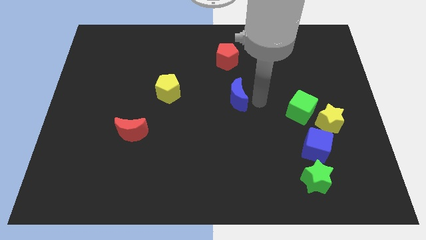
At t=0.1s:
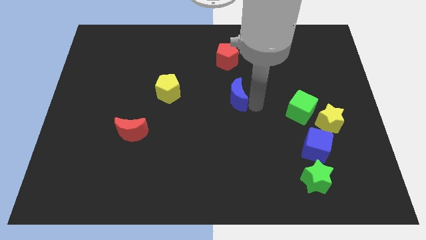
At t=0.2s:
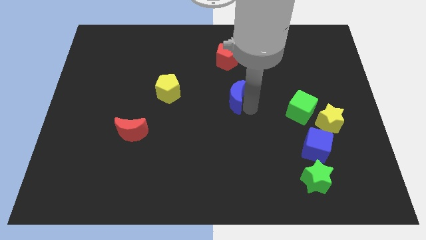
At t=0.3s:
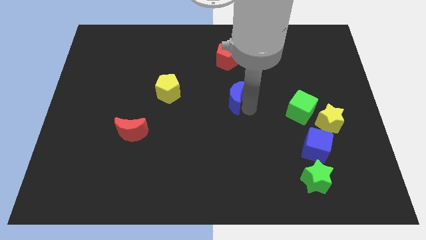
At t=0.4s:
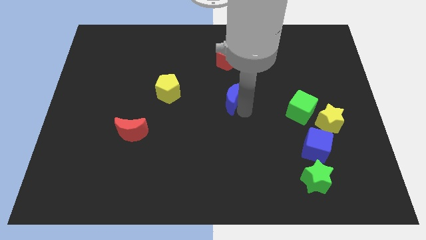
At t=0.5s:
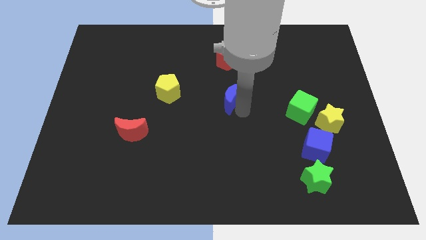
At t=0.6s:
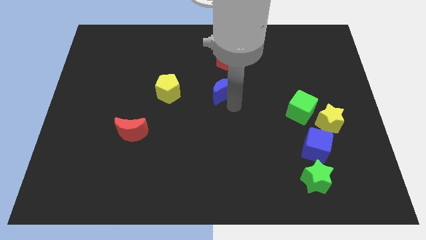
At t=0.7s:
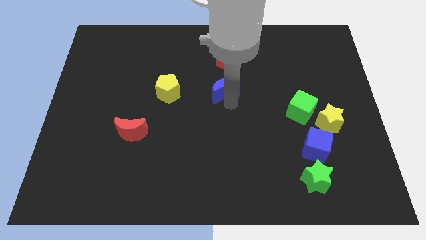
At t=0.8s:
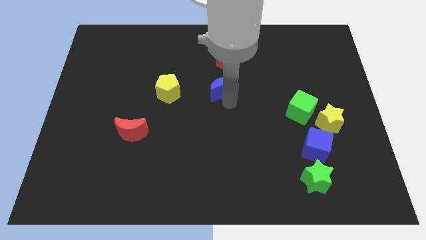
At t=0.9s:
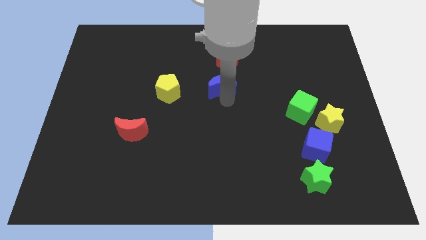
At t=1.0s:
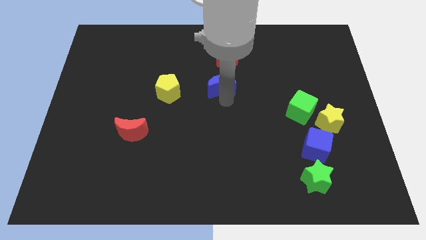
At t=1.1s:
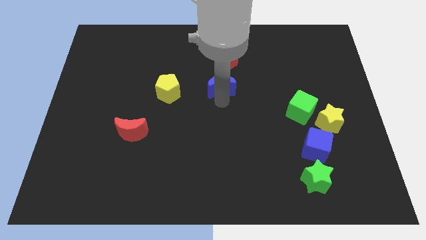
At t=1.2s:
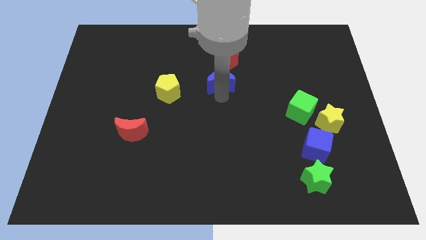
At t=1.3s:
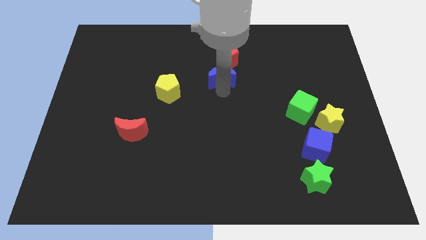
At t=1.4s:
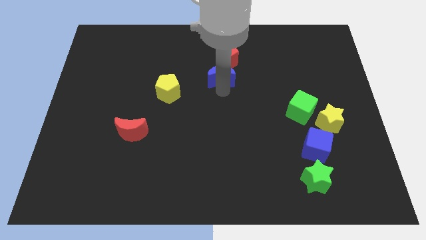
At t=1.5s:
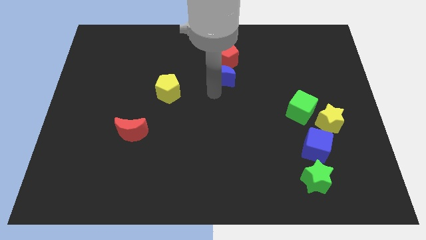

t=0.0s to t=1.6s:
move the blue moon towards the red pentagon

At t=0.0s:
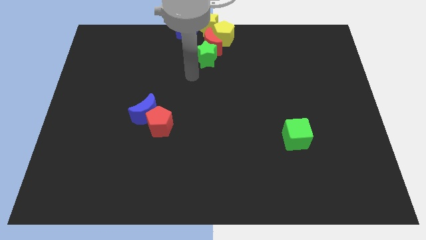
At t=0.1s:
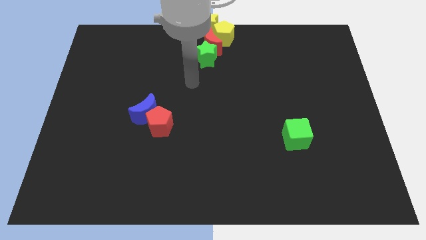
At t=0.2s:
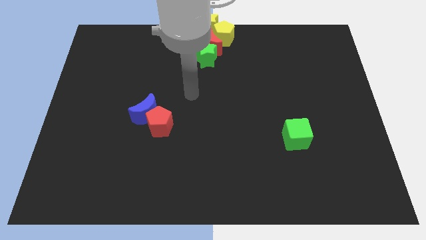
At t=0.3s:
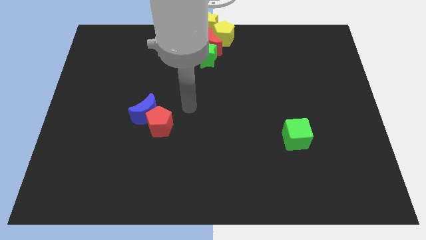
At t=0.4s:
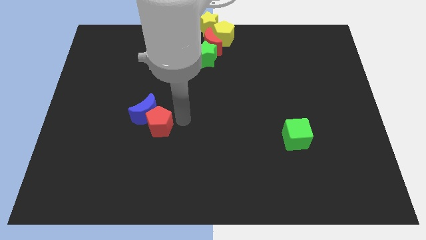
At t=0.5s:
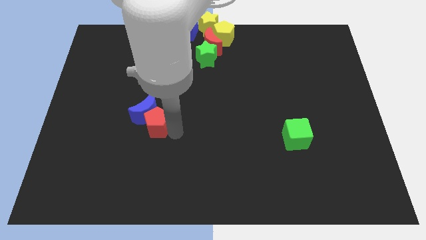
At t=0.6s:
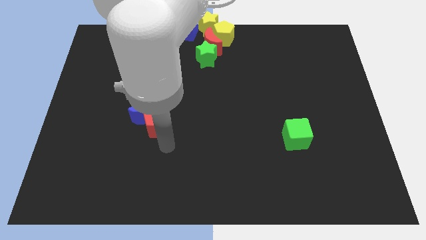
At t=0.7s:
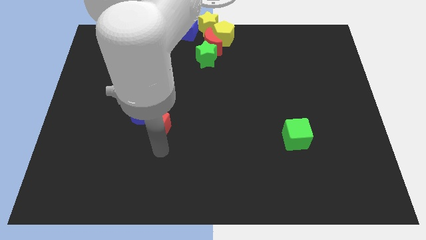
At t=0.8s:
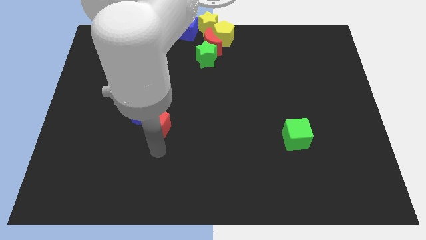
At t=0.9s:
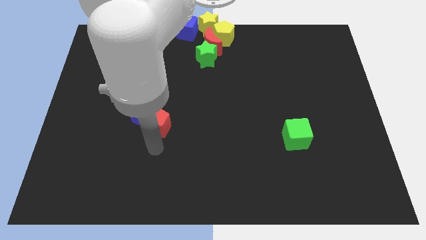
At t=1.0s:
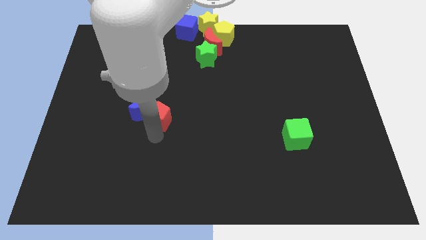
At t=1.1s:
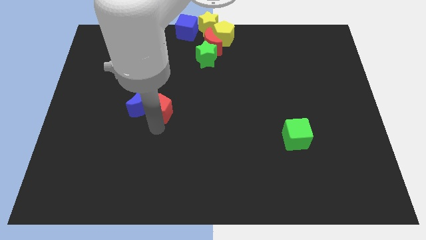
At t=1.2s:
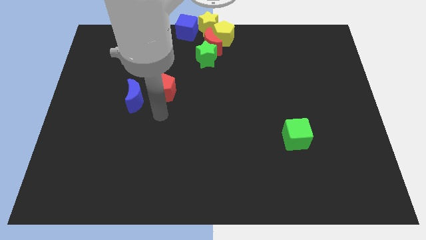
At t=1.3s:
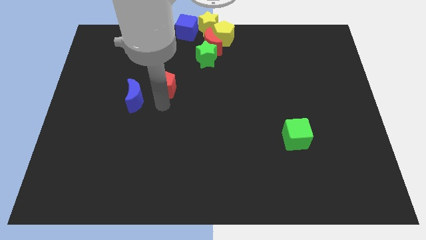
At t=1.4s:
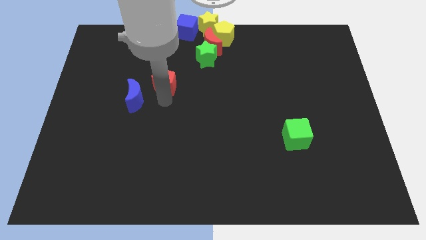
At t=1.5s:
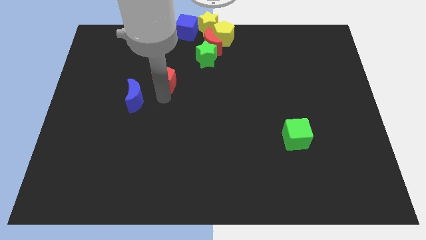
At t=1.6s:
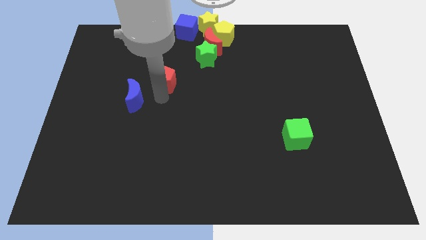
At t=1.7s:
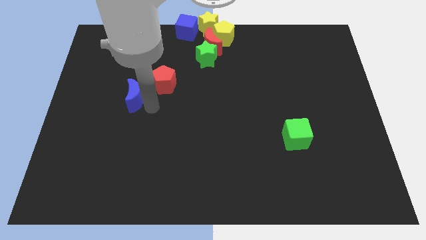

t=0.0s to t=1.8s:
separate red pentagon from blue crescent

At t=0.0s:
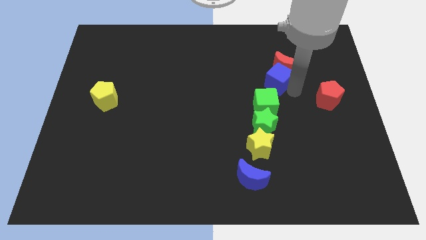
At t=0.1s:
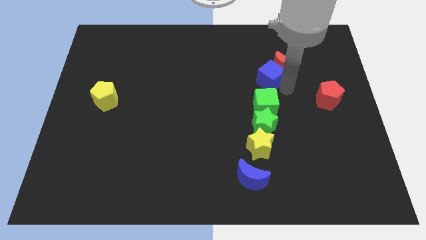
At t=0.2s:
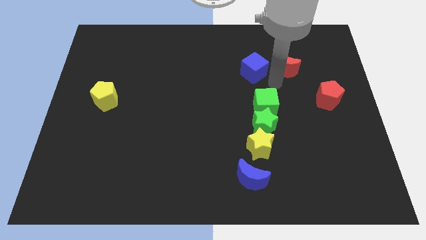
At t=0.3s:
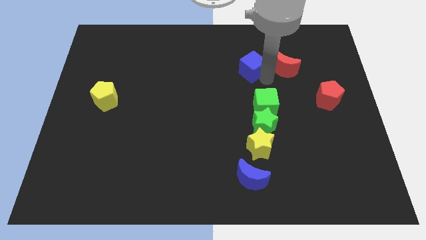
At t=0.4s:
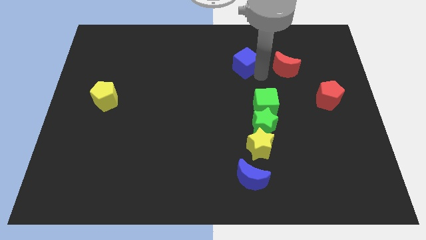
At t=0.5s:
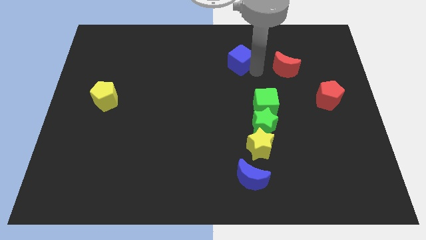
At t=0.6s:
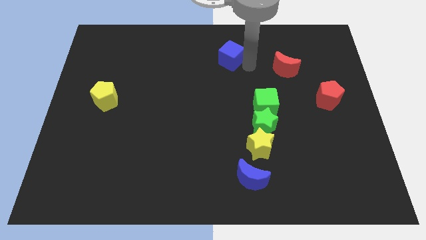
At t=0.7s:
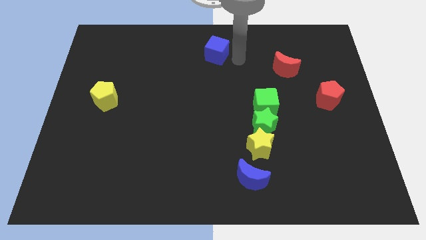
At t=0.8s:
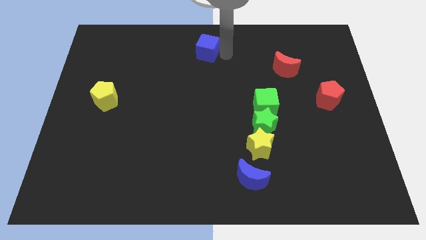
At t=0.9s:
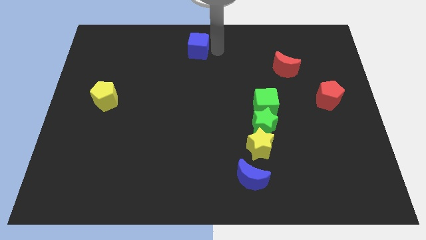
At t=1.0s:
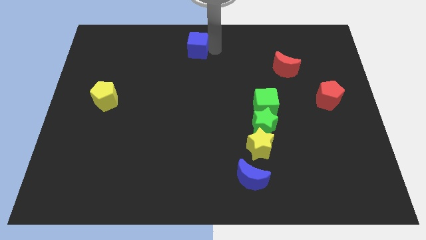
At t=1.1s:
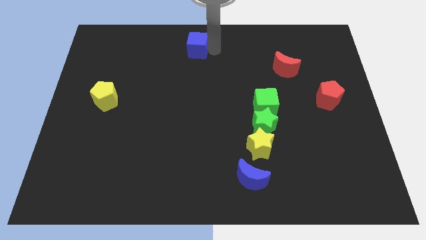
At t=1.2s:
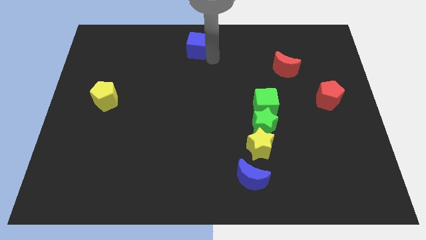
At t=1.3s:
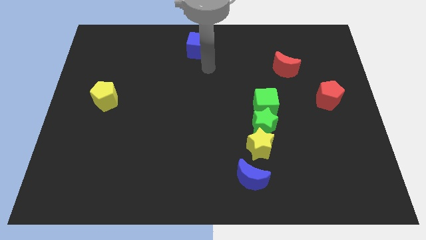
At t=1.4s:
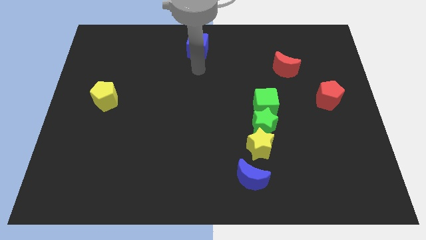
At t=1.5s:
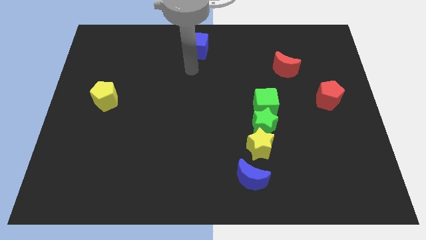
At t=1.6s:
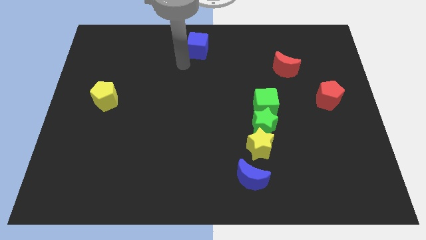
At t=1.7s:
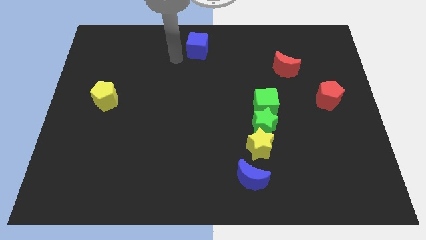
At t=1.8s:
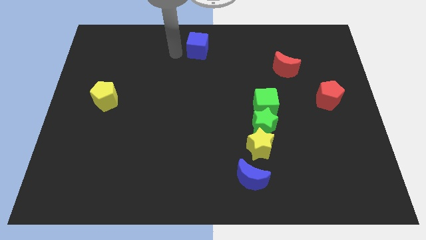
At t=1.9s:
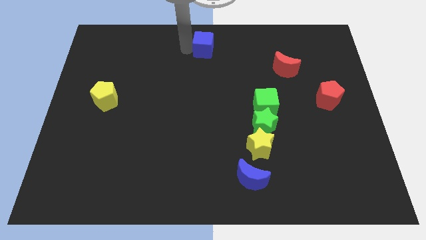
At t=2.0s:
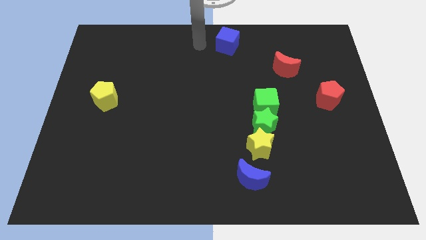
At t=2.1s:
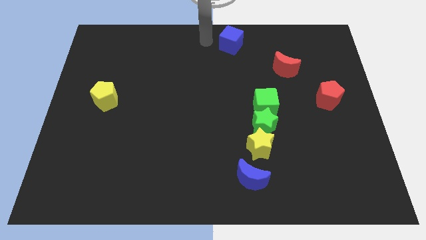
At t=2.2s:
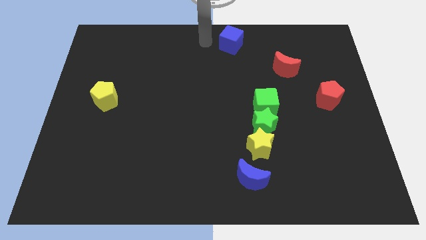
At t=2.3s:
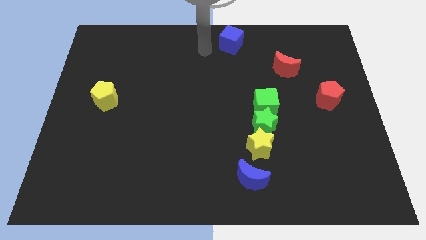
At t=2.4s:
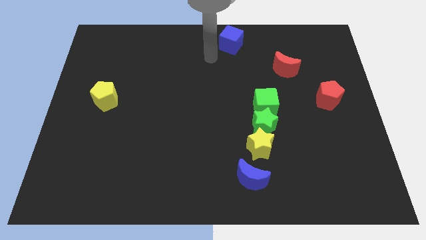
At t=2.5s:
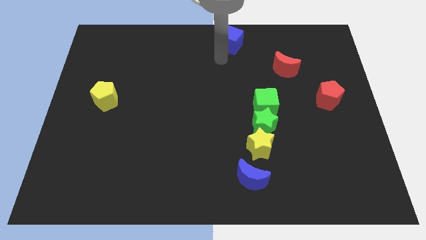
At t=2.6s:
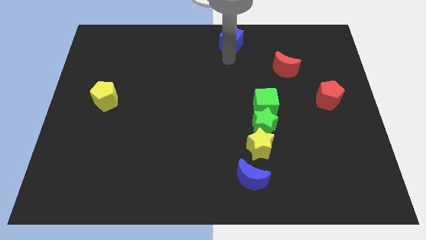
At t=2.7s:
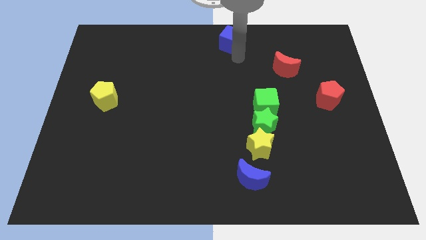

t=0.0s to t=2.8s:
move the blue cube diagonal above the red moon

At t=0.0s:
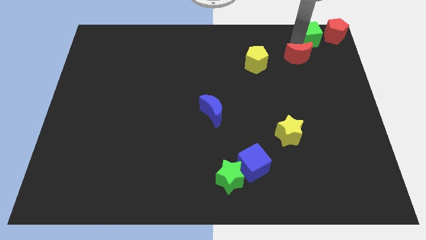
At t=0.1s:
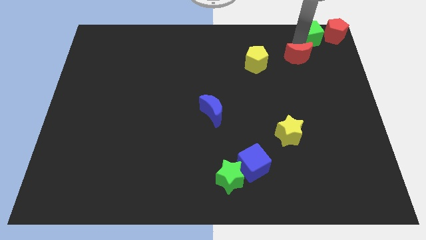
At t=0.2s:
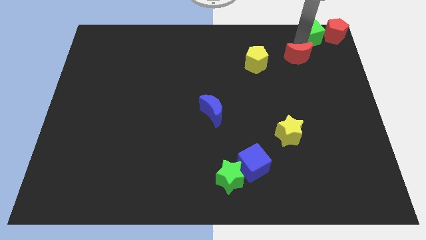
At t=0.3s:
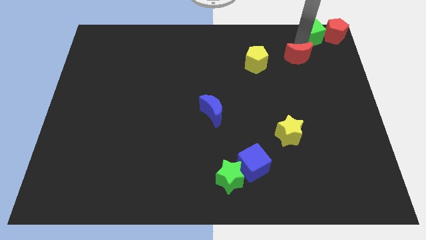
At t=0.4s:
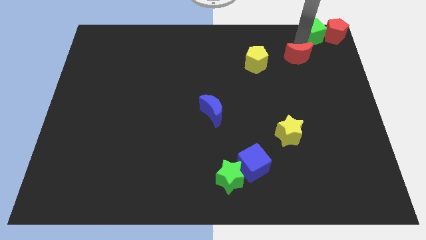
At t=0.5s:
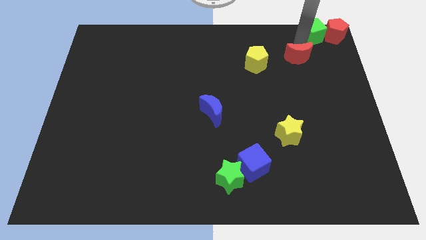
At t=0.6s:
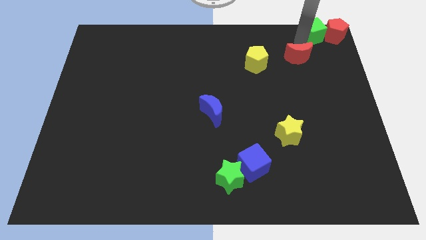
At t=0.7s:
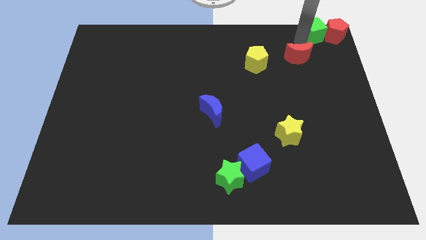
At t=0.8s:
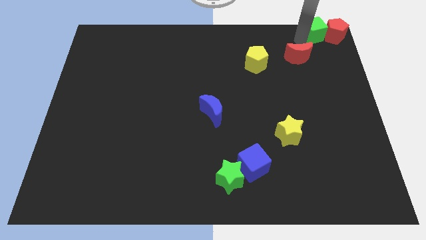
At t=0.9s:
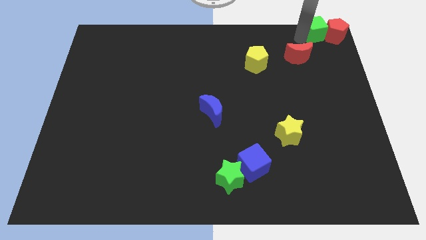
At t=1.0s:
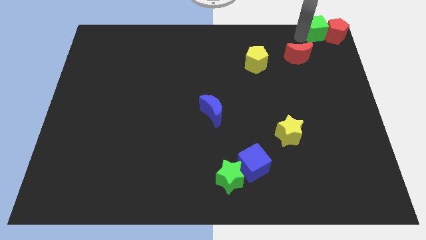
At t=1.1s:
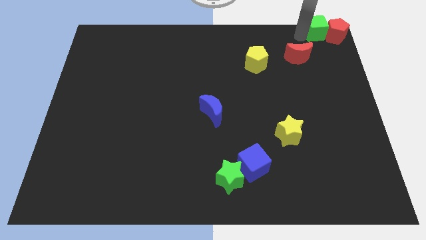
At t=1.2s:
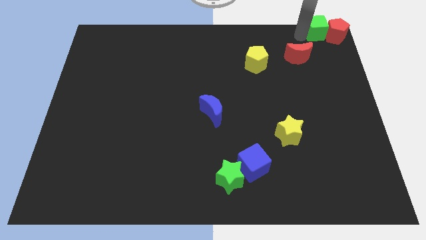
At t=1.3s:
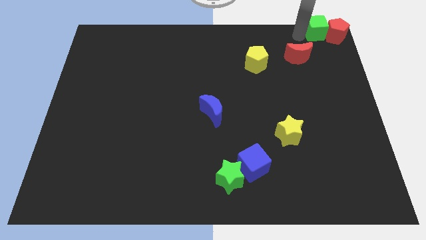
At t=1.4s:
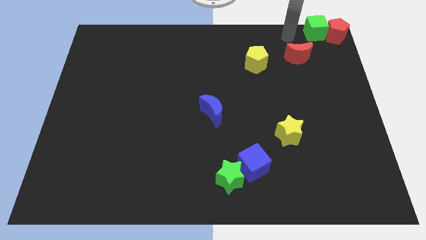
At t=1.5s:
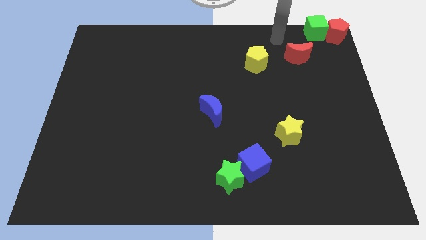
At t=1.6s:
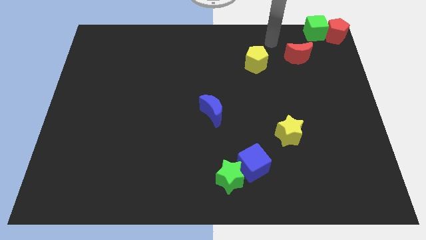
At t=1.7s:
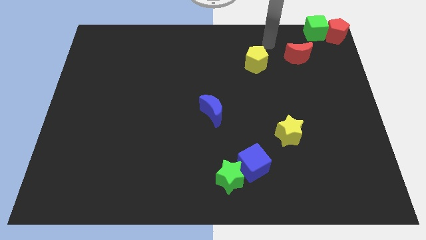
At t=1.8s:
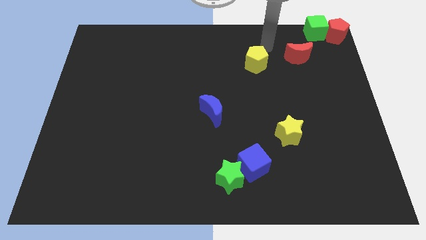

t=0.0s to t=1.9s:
move the green cube into the red pentagon

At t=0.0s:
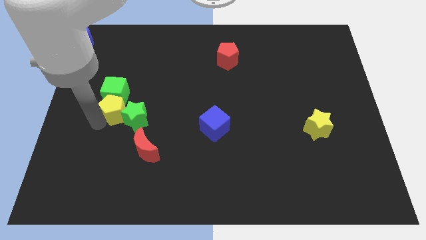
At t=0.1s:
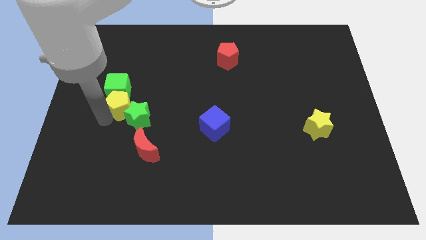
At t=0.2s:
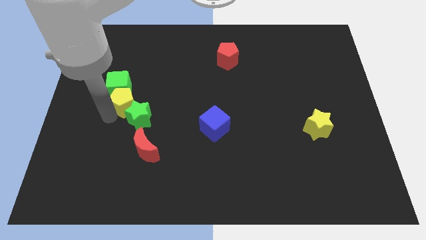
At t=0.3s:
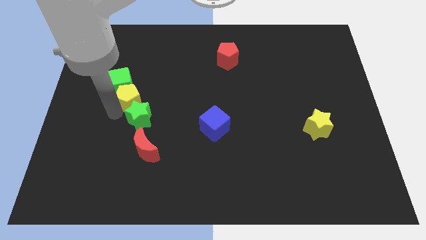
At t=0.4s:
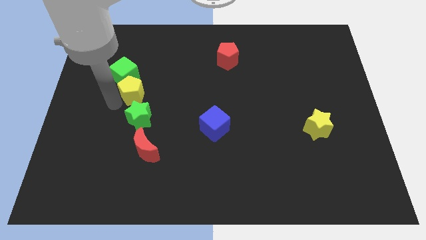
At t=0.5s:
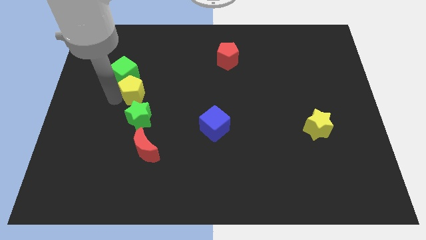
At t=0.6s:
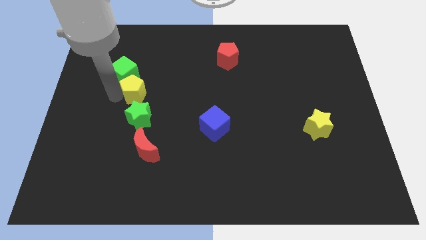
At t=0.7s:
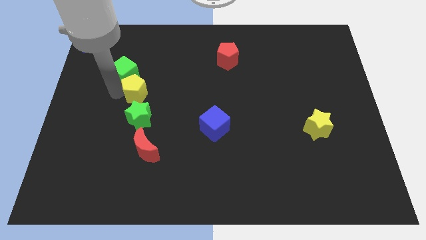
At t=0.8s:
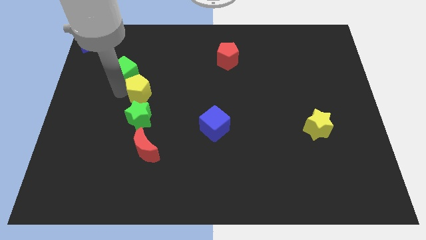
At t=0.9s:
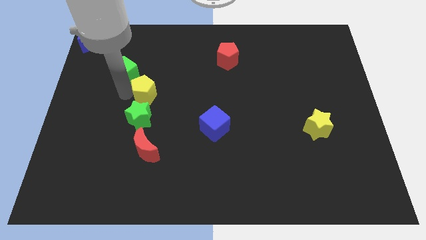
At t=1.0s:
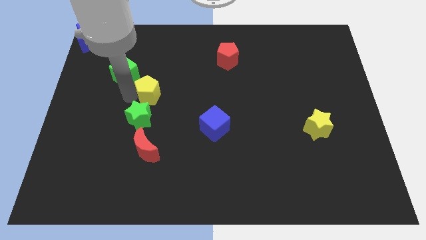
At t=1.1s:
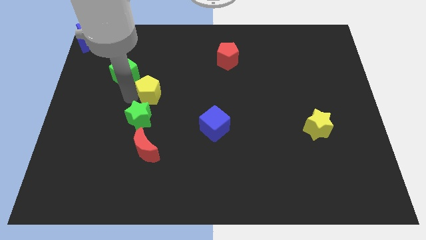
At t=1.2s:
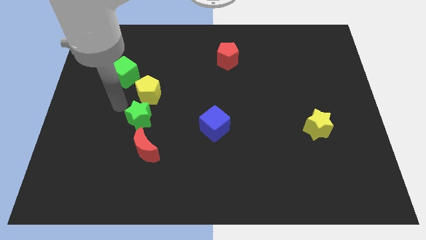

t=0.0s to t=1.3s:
separate the yellow pentagon from the green blocks
